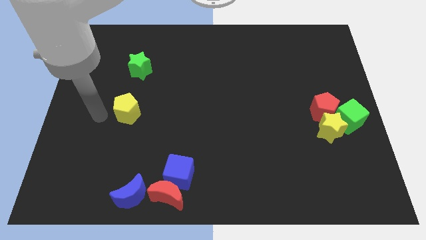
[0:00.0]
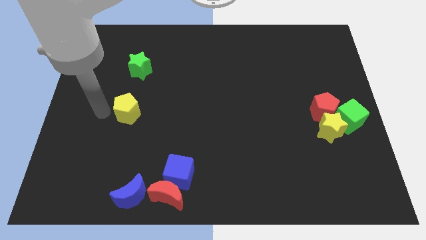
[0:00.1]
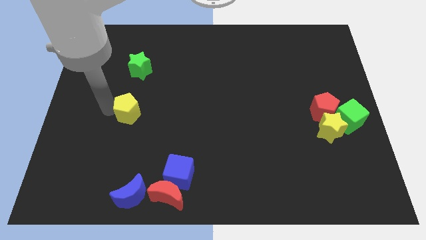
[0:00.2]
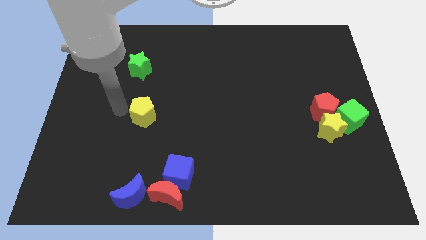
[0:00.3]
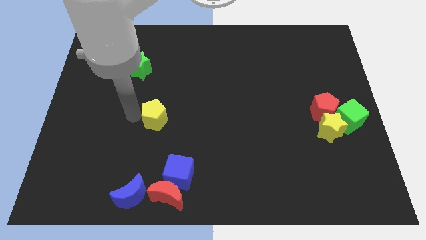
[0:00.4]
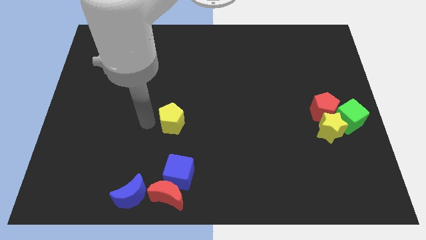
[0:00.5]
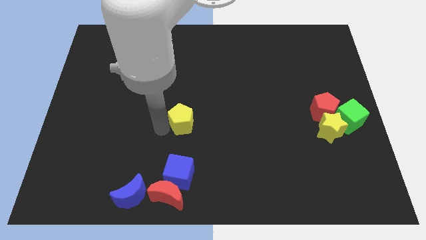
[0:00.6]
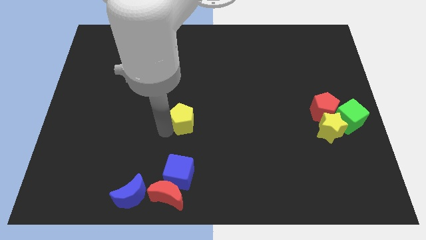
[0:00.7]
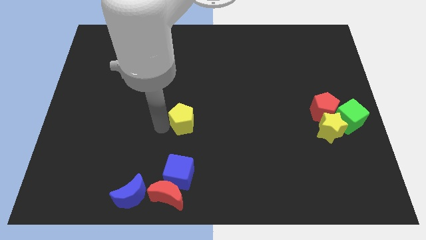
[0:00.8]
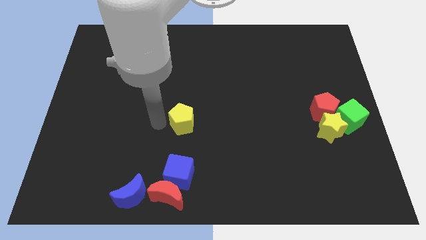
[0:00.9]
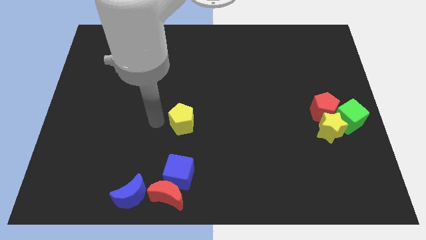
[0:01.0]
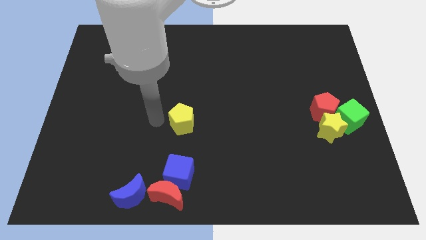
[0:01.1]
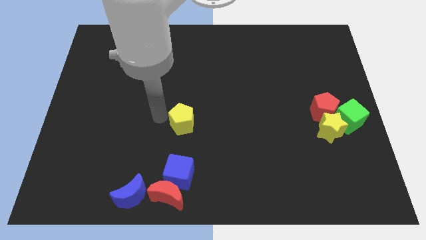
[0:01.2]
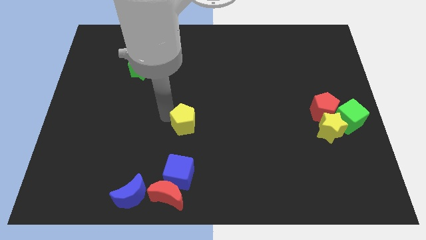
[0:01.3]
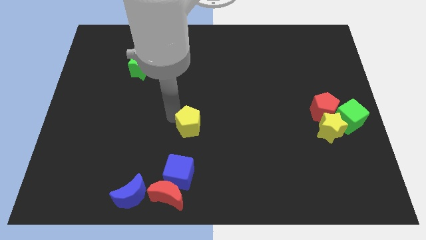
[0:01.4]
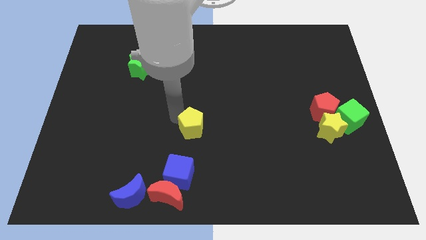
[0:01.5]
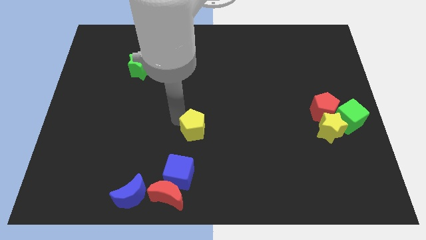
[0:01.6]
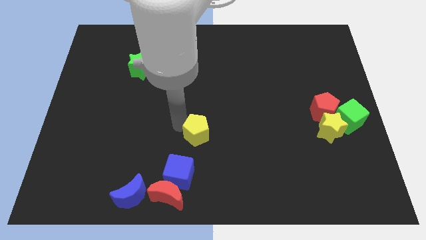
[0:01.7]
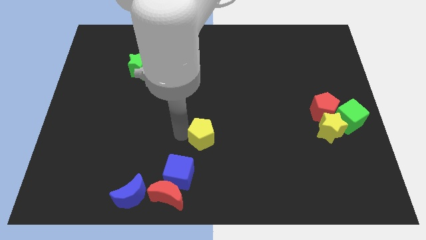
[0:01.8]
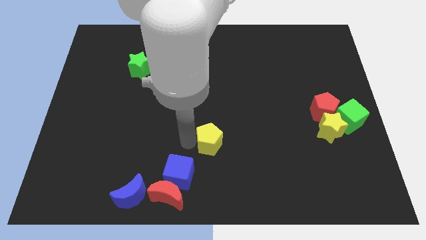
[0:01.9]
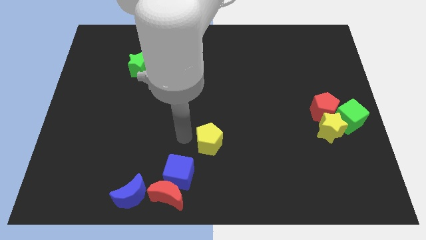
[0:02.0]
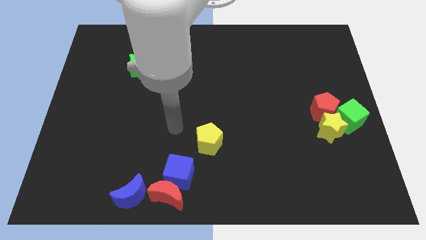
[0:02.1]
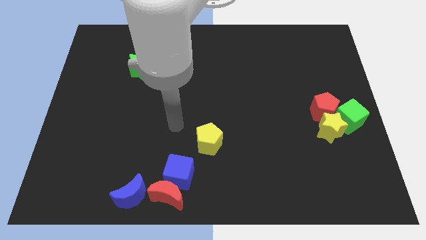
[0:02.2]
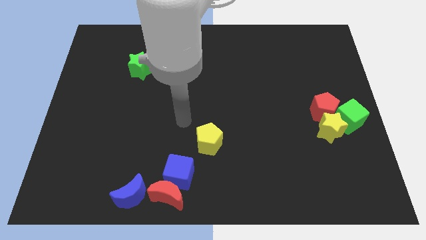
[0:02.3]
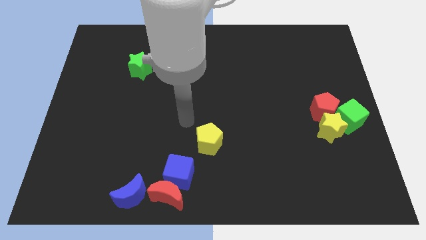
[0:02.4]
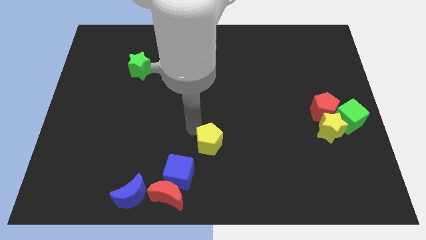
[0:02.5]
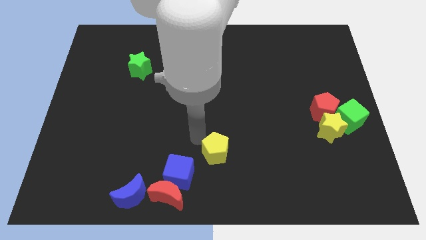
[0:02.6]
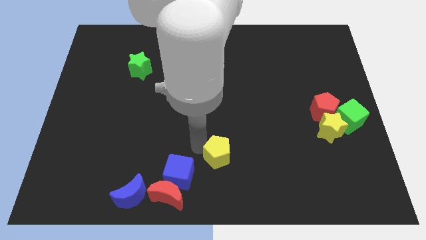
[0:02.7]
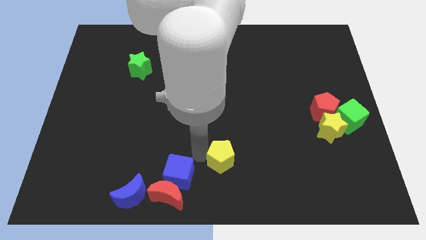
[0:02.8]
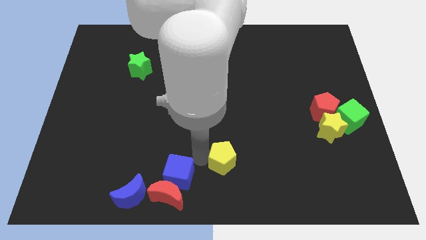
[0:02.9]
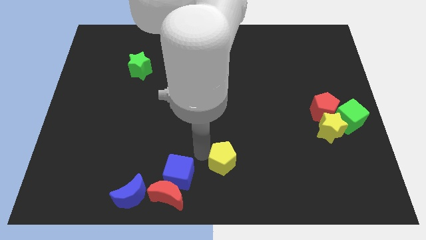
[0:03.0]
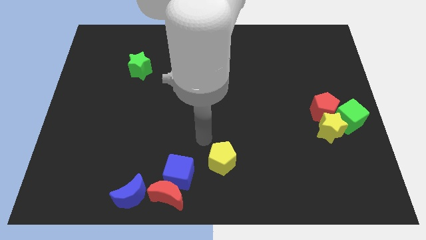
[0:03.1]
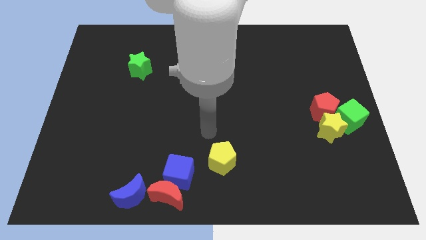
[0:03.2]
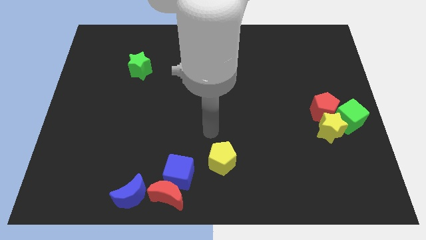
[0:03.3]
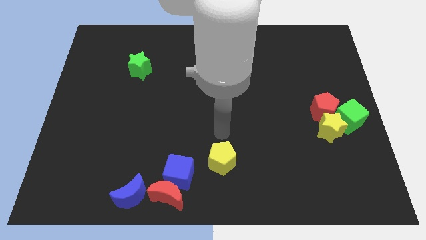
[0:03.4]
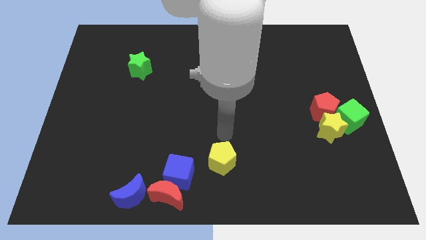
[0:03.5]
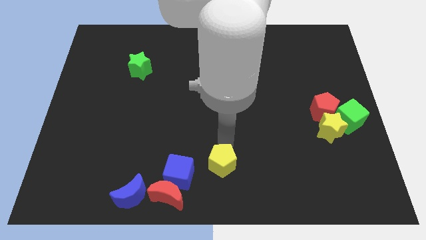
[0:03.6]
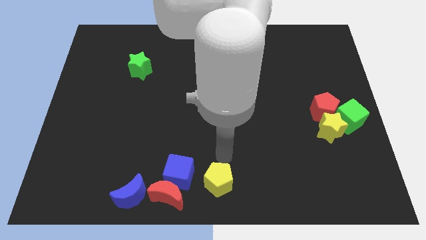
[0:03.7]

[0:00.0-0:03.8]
place the yellow pentagon right to the blue cube

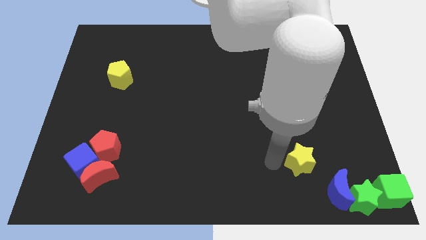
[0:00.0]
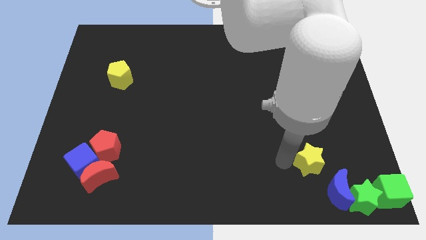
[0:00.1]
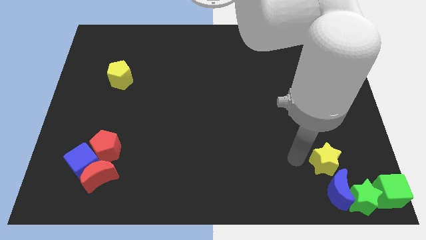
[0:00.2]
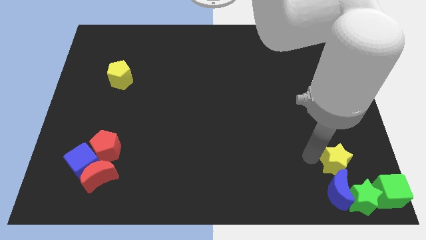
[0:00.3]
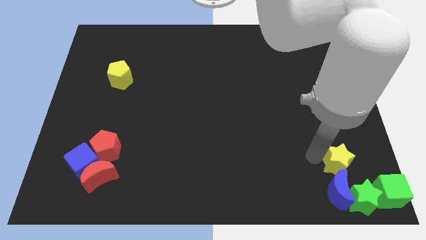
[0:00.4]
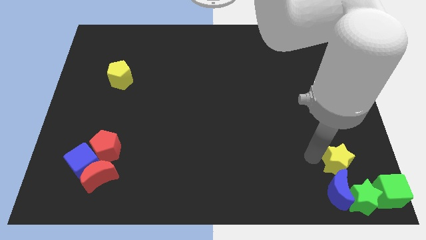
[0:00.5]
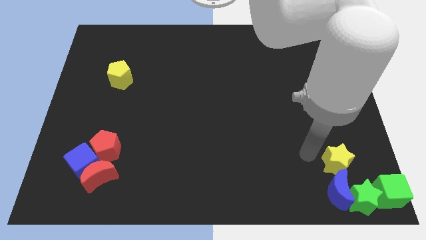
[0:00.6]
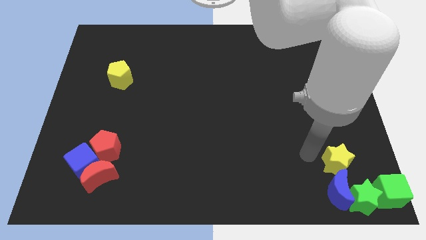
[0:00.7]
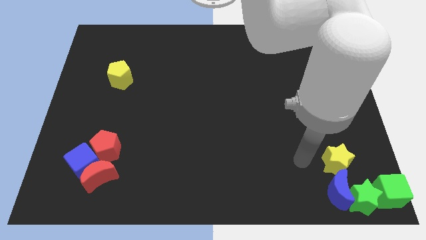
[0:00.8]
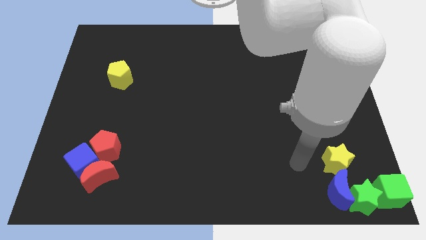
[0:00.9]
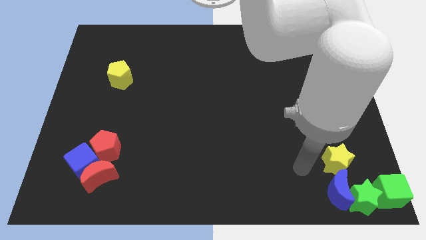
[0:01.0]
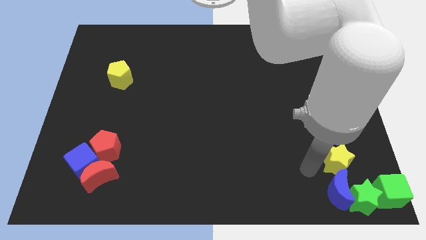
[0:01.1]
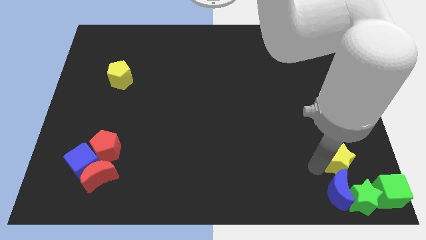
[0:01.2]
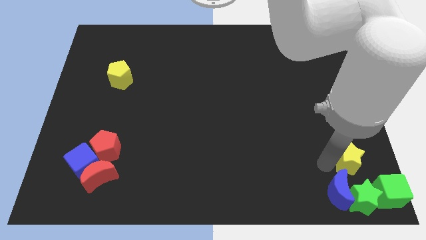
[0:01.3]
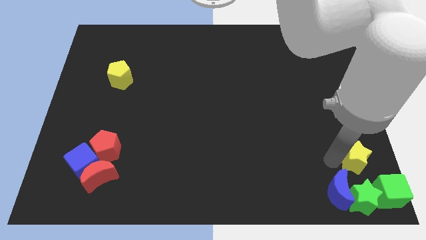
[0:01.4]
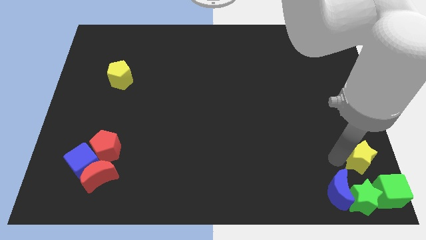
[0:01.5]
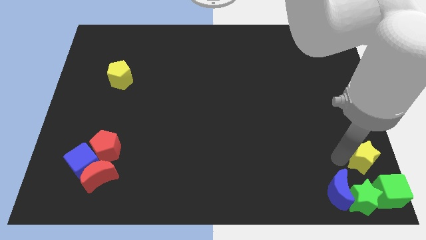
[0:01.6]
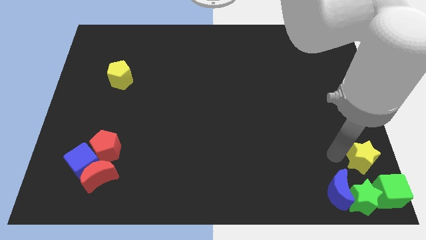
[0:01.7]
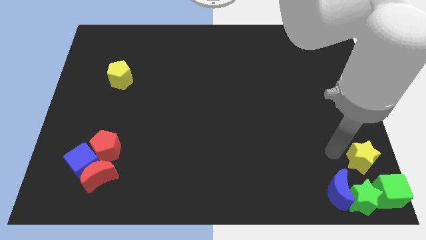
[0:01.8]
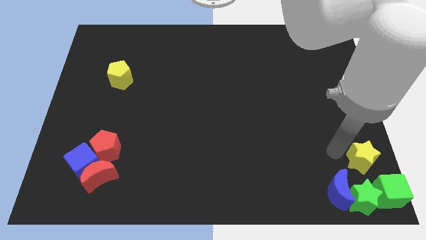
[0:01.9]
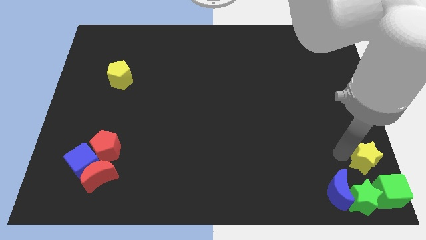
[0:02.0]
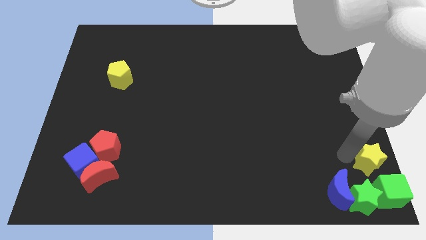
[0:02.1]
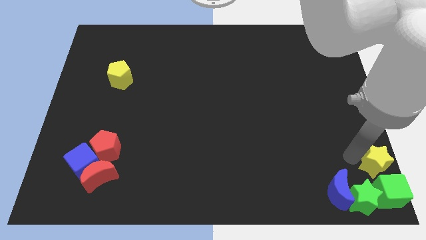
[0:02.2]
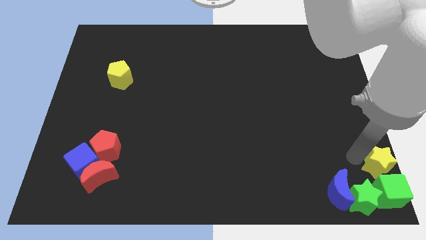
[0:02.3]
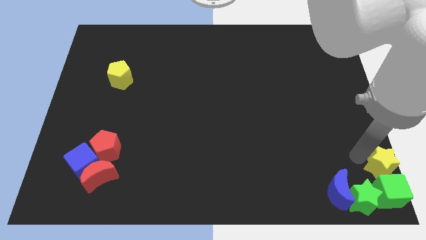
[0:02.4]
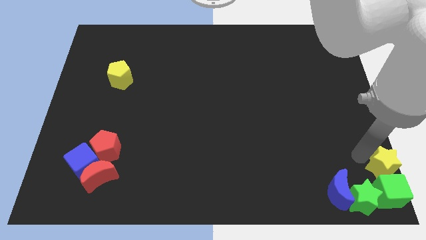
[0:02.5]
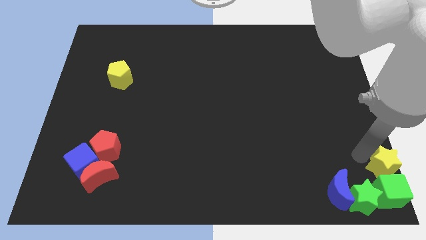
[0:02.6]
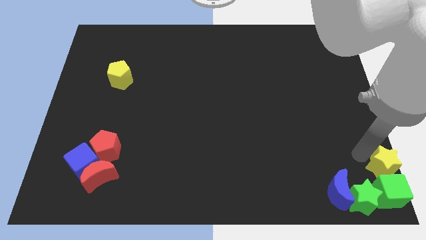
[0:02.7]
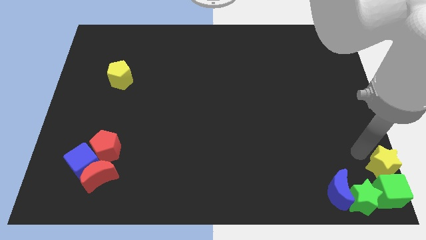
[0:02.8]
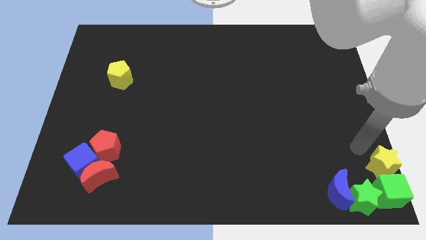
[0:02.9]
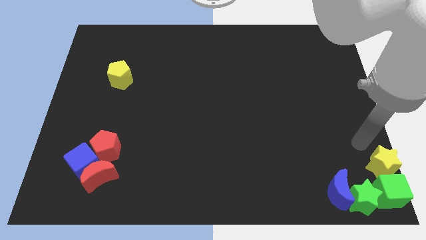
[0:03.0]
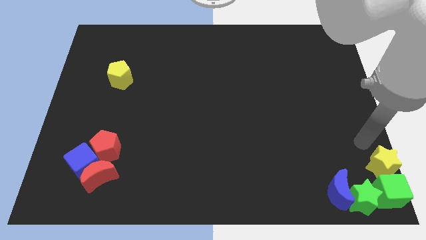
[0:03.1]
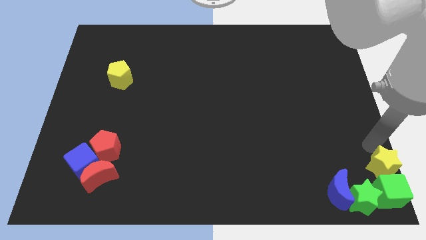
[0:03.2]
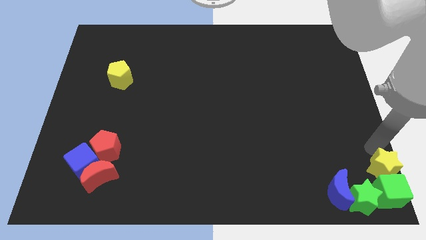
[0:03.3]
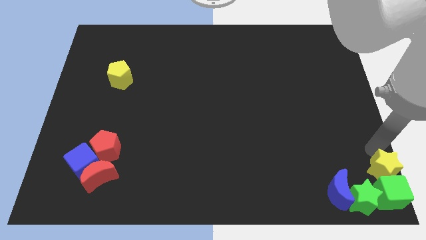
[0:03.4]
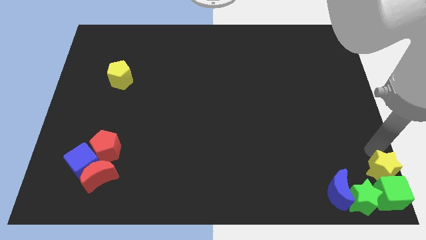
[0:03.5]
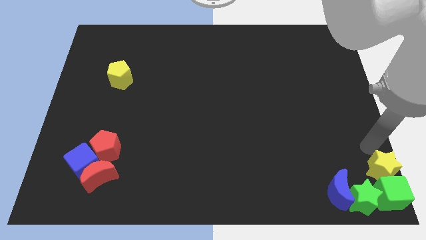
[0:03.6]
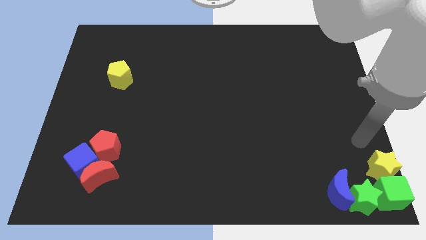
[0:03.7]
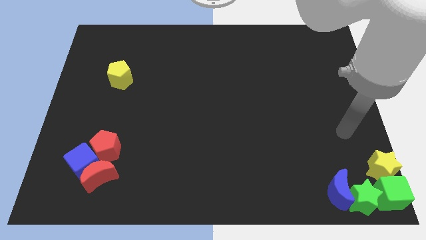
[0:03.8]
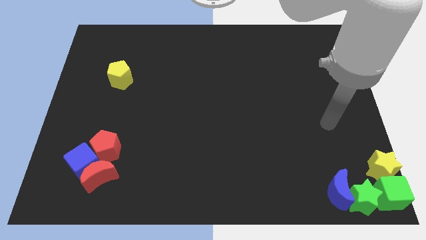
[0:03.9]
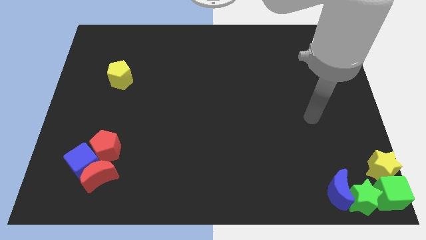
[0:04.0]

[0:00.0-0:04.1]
push the yellow star top to the green cube

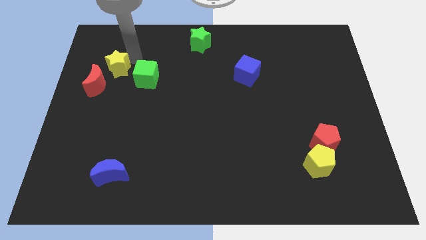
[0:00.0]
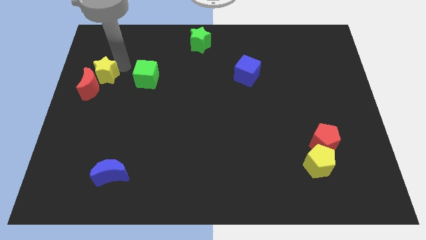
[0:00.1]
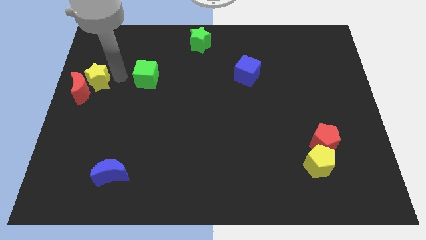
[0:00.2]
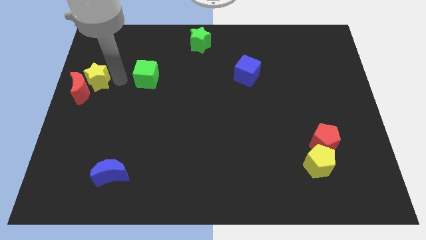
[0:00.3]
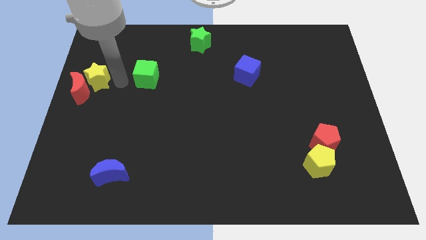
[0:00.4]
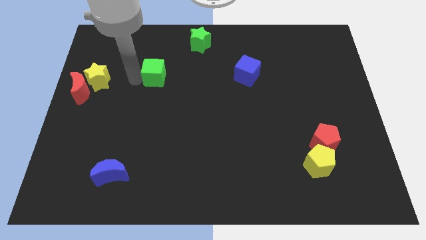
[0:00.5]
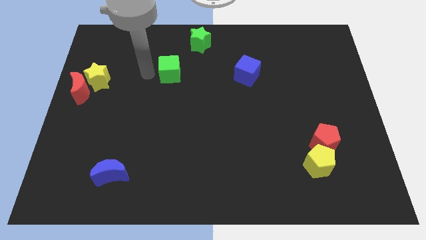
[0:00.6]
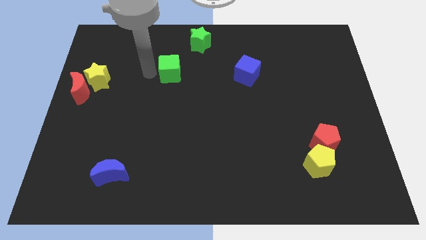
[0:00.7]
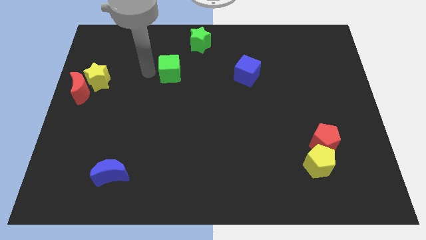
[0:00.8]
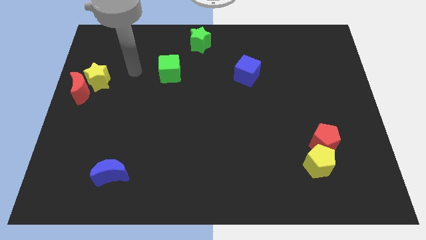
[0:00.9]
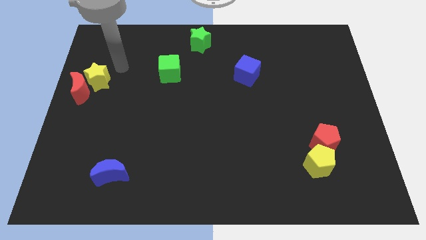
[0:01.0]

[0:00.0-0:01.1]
move green cube parallel to the blue cube
